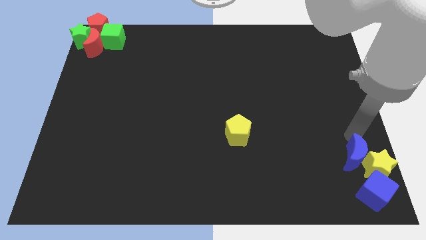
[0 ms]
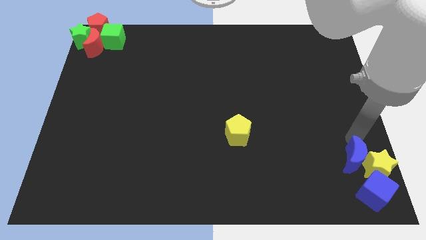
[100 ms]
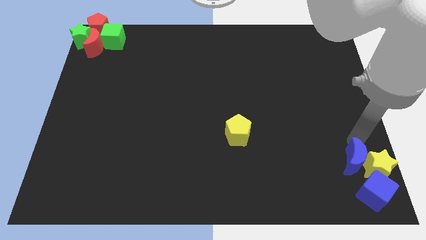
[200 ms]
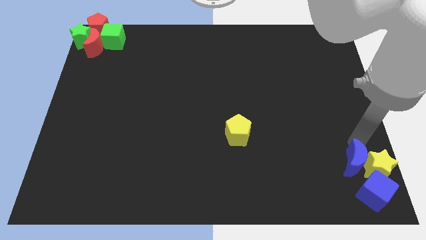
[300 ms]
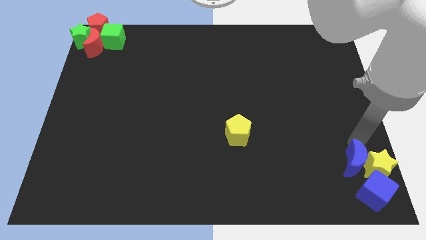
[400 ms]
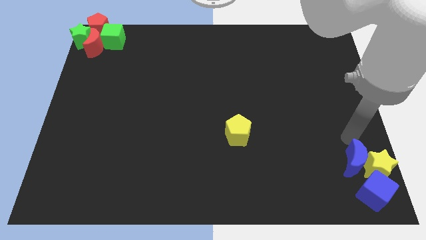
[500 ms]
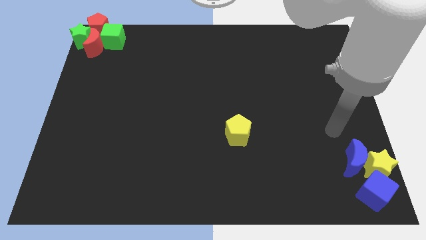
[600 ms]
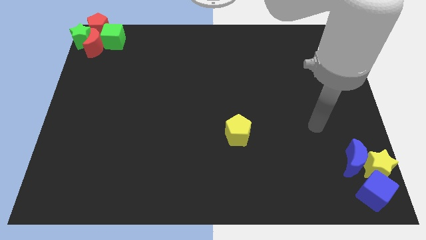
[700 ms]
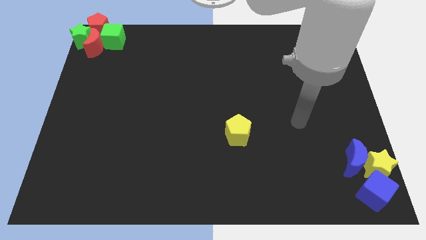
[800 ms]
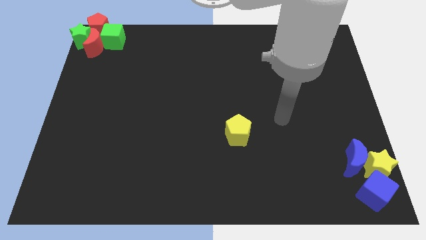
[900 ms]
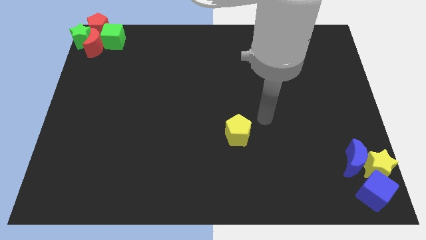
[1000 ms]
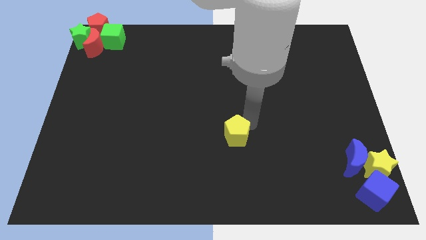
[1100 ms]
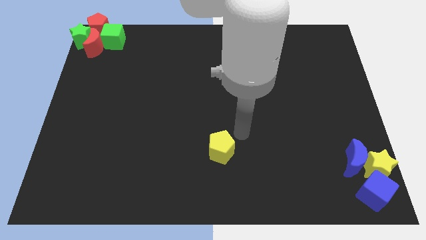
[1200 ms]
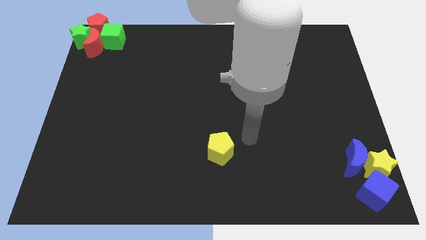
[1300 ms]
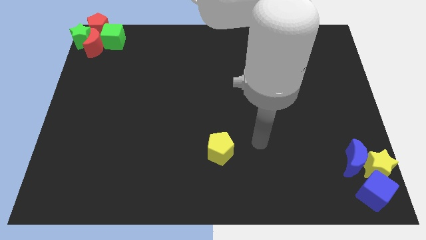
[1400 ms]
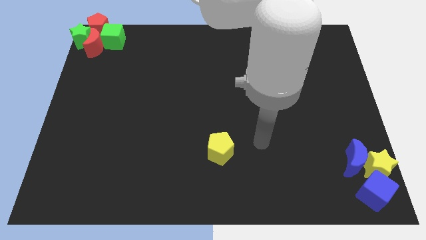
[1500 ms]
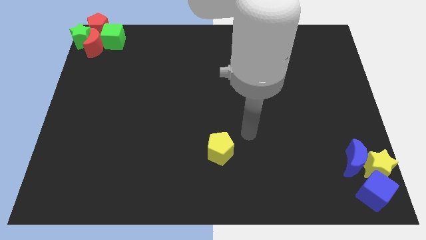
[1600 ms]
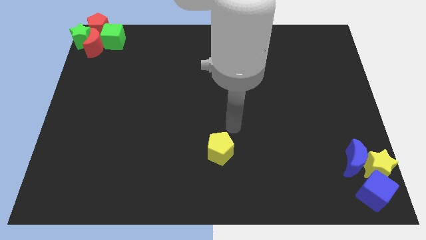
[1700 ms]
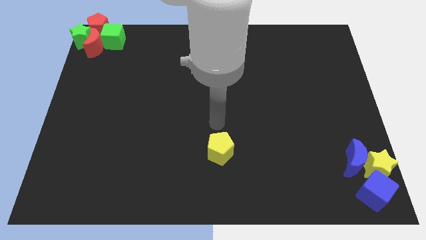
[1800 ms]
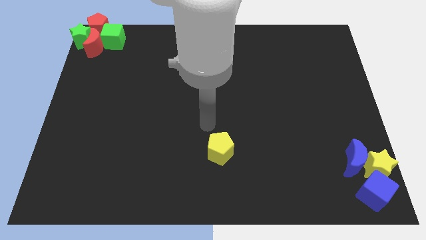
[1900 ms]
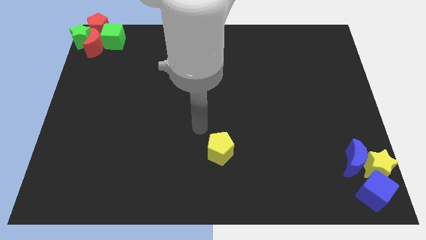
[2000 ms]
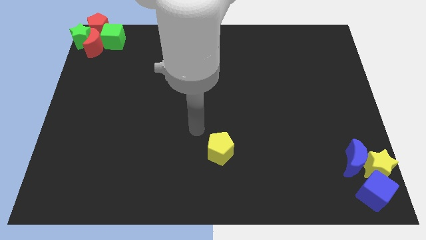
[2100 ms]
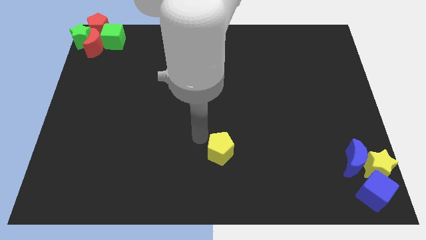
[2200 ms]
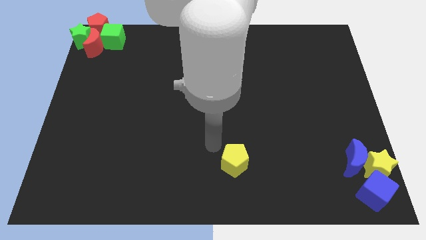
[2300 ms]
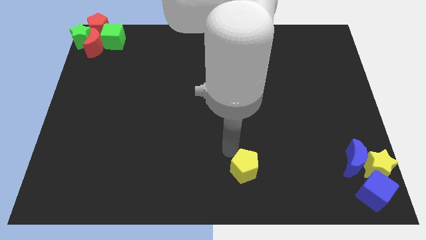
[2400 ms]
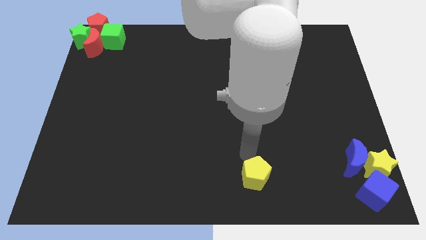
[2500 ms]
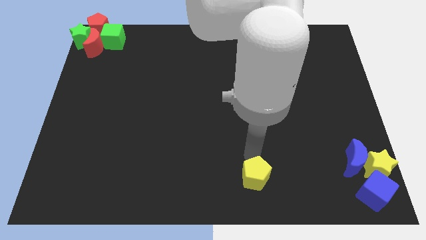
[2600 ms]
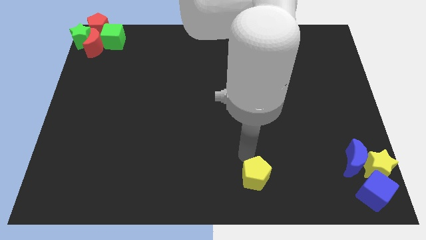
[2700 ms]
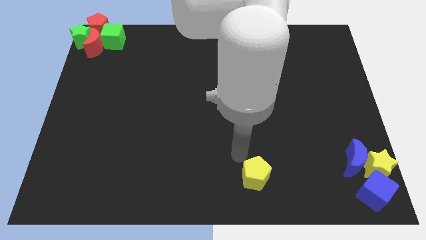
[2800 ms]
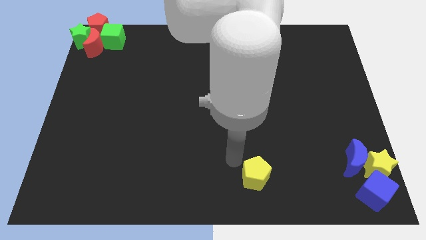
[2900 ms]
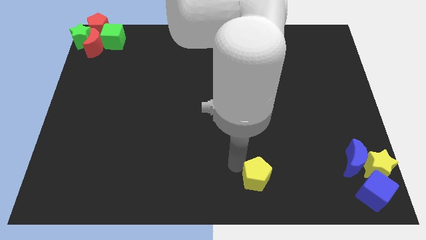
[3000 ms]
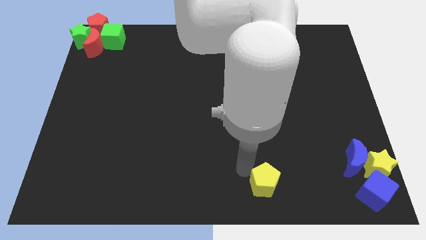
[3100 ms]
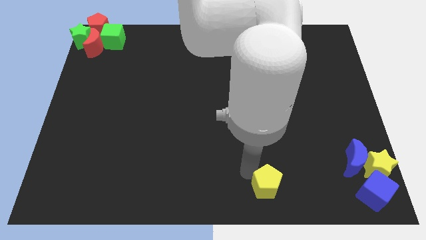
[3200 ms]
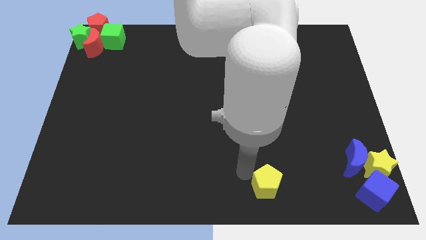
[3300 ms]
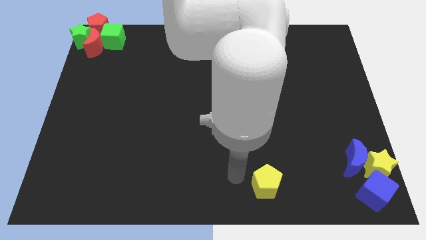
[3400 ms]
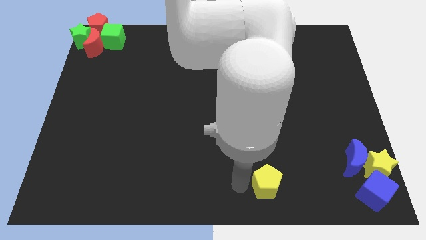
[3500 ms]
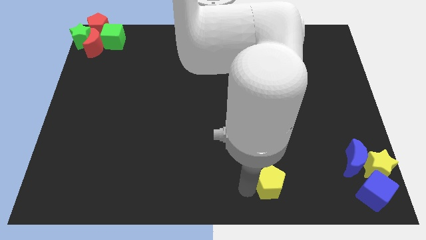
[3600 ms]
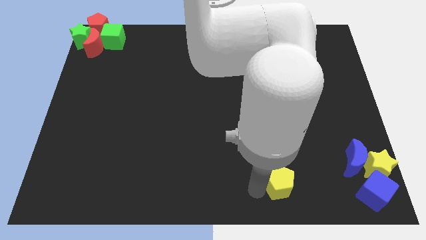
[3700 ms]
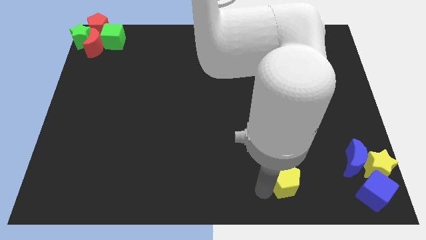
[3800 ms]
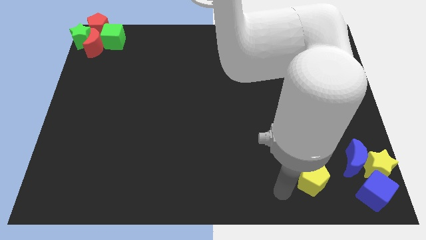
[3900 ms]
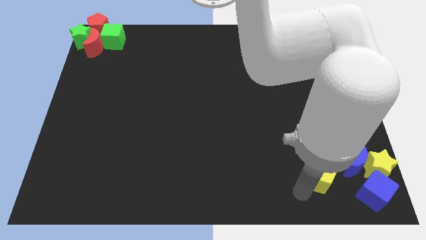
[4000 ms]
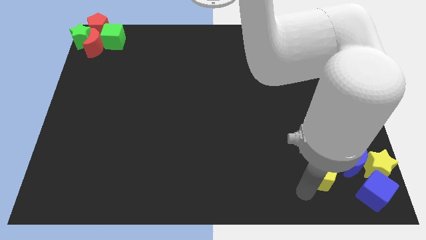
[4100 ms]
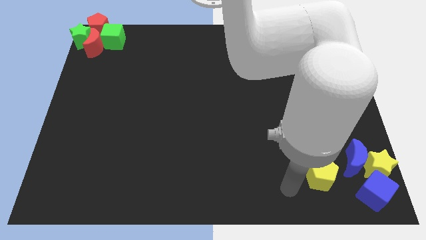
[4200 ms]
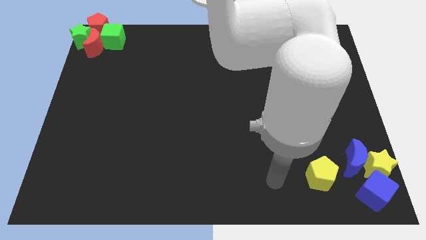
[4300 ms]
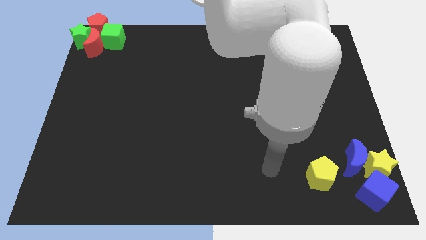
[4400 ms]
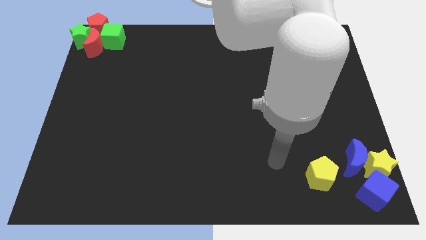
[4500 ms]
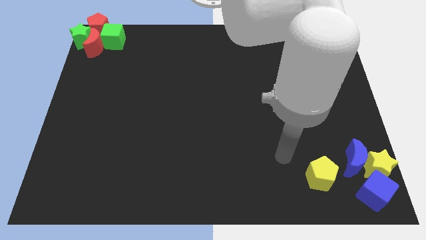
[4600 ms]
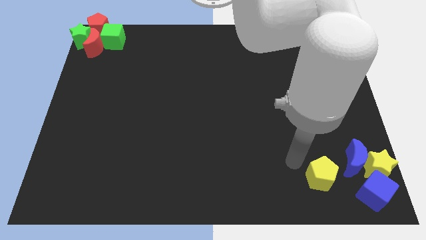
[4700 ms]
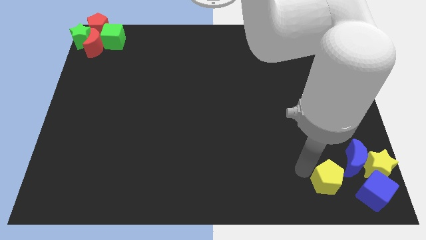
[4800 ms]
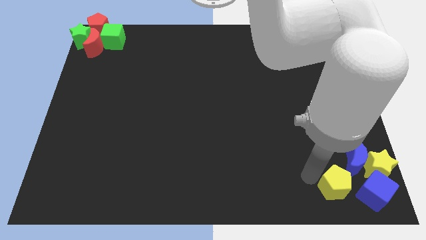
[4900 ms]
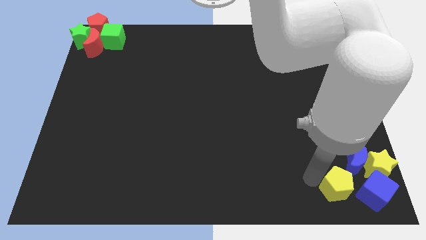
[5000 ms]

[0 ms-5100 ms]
move the yellow pentagon to the bottom right of the board

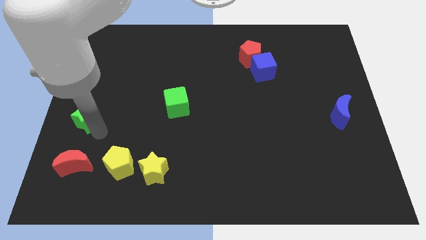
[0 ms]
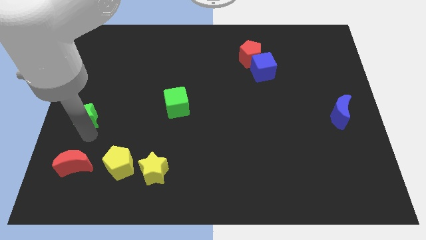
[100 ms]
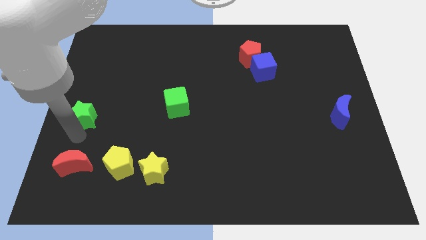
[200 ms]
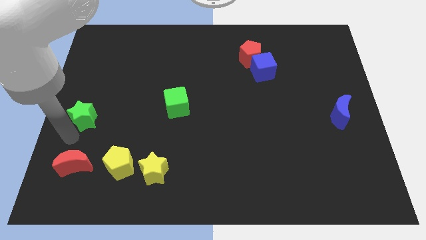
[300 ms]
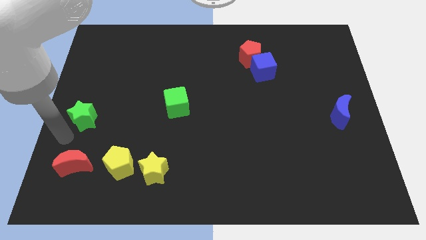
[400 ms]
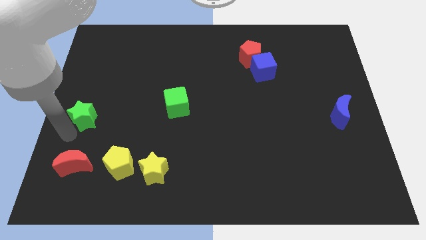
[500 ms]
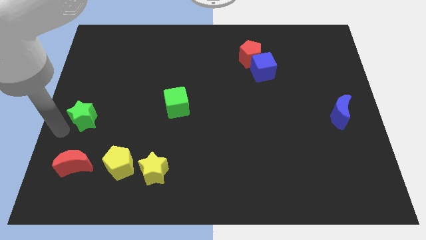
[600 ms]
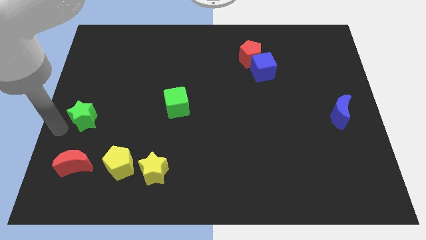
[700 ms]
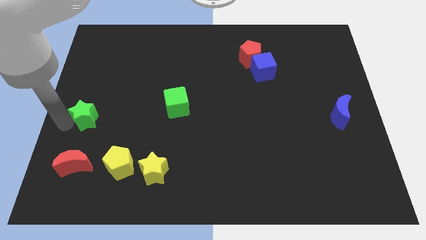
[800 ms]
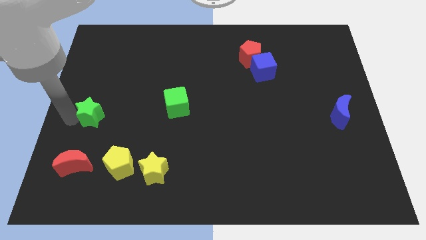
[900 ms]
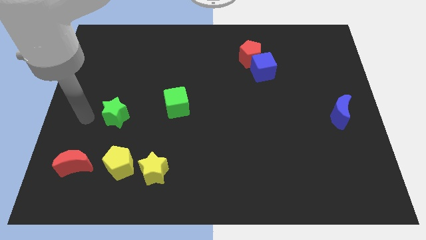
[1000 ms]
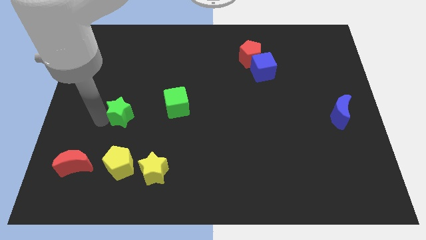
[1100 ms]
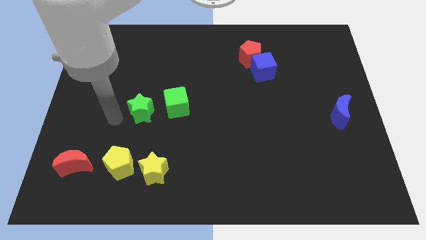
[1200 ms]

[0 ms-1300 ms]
move the green star above the yellow pentagon

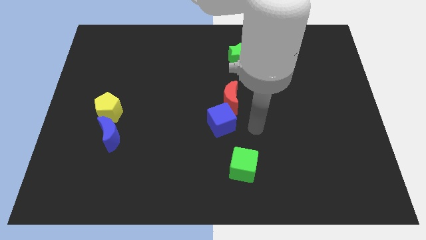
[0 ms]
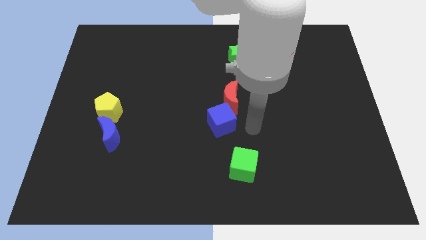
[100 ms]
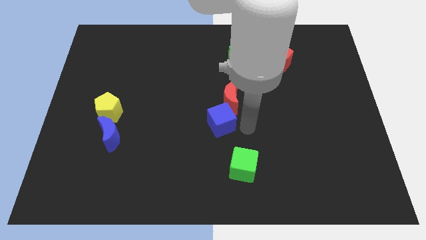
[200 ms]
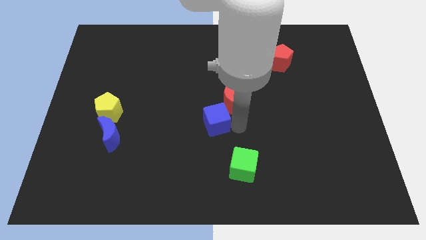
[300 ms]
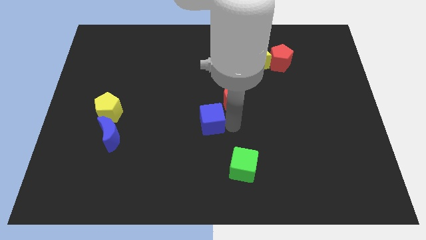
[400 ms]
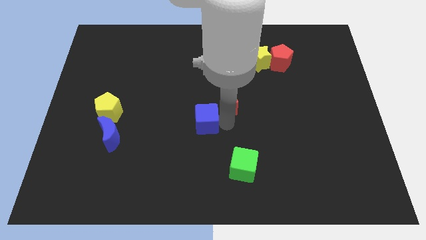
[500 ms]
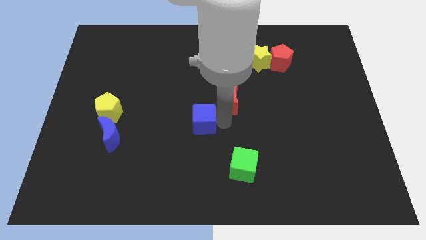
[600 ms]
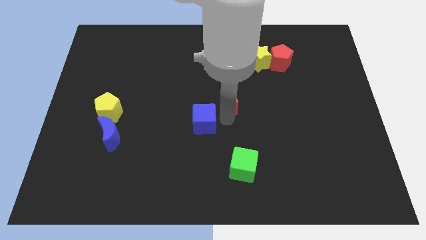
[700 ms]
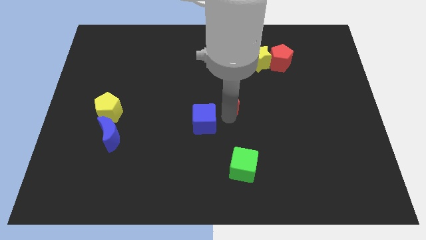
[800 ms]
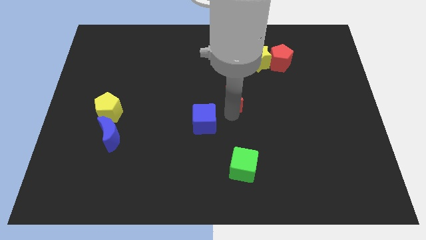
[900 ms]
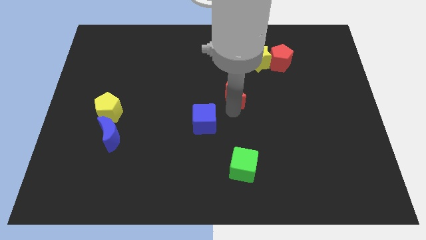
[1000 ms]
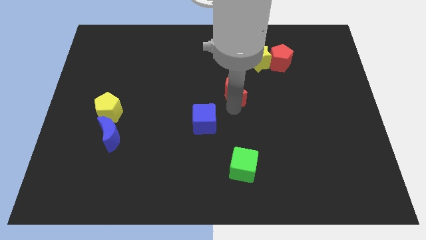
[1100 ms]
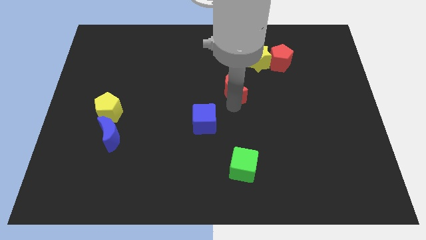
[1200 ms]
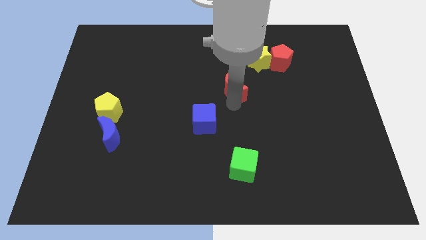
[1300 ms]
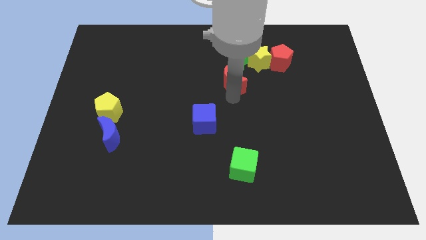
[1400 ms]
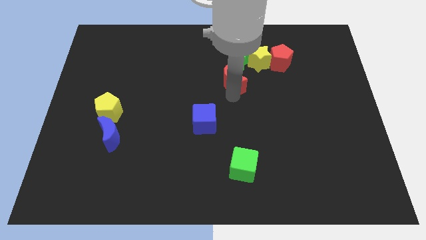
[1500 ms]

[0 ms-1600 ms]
separate blue cube and red crescent

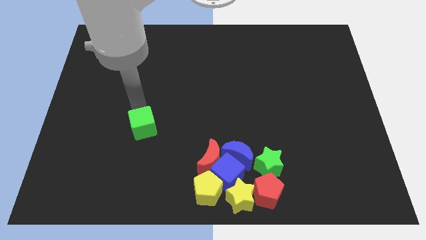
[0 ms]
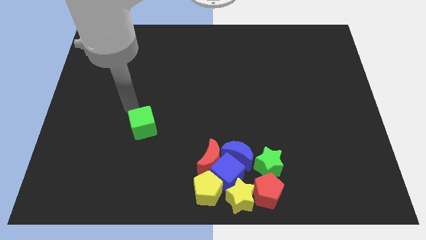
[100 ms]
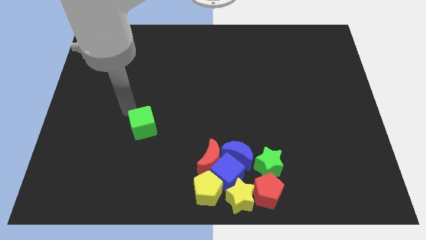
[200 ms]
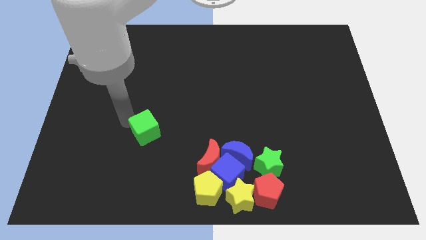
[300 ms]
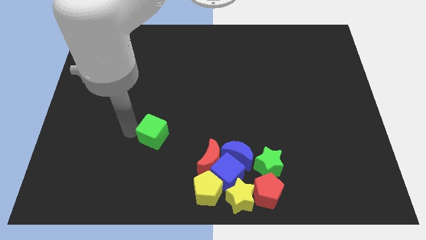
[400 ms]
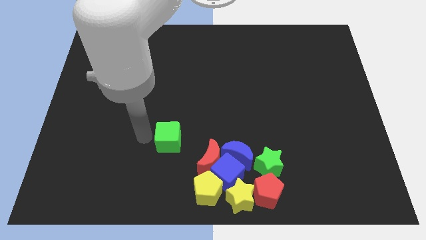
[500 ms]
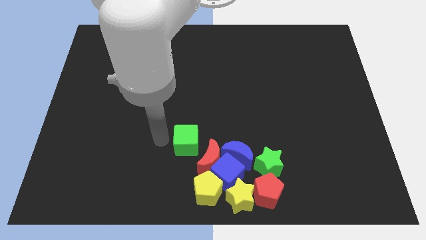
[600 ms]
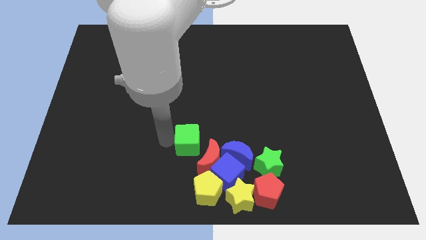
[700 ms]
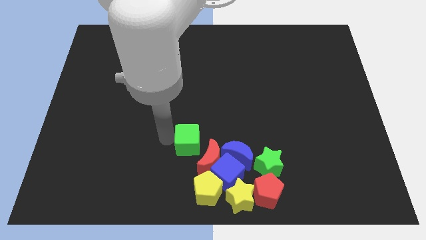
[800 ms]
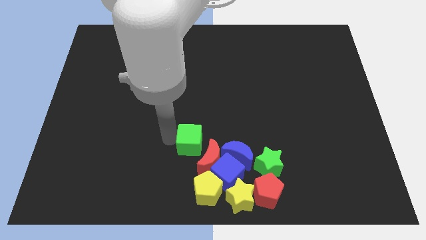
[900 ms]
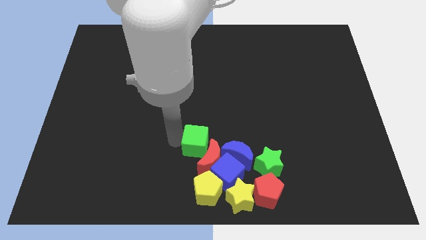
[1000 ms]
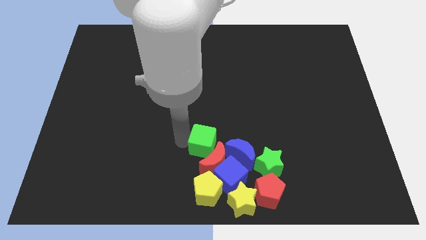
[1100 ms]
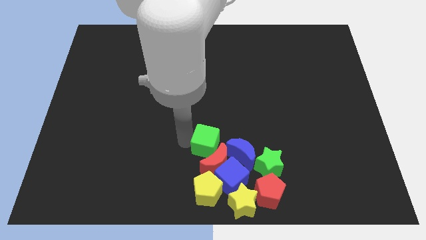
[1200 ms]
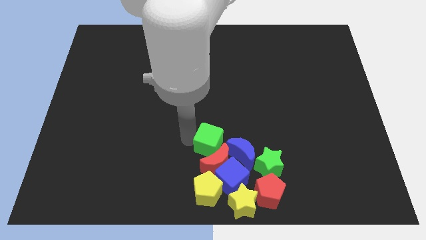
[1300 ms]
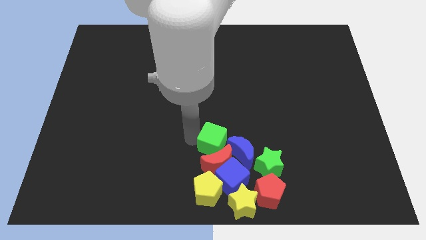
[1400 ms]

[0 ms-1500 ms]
push the green cube into the red crescent
